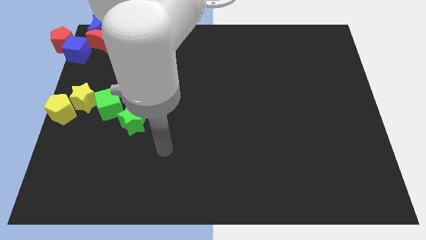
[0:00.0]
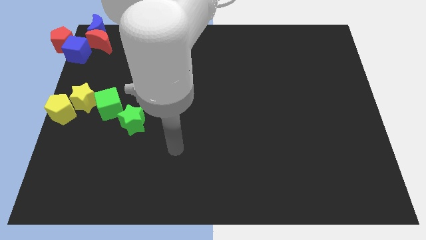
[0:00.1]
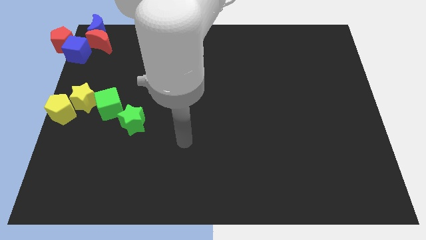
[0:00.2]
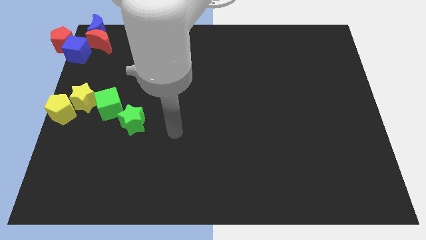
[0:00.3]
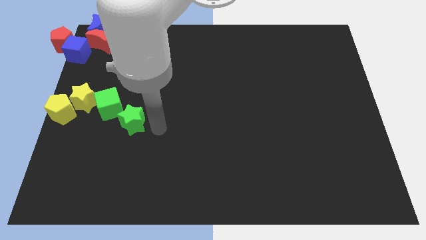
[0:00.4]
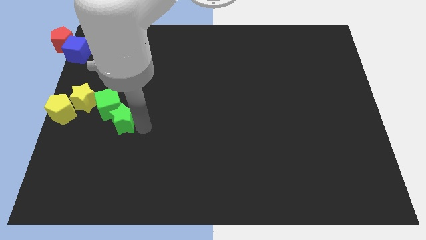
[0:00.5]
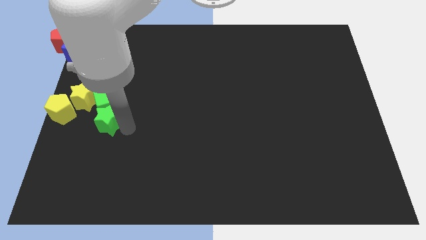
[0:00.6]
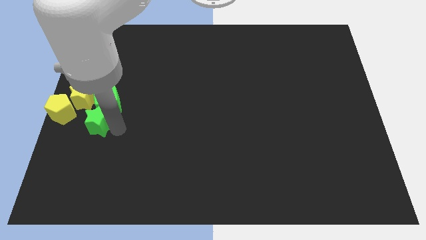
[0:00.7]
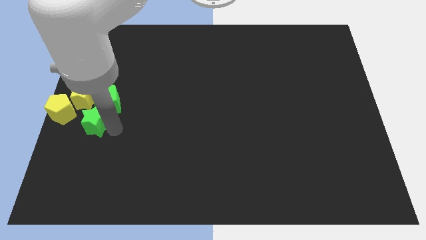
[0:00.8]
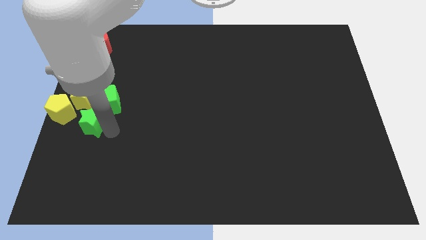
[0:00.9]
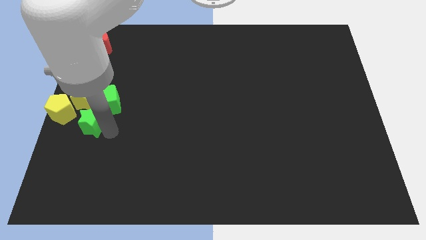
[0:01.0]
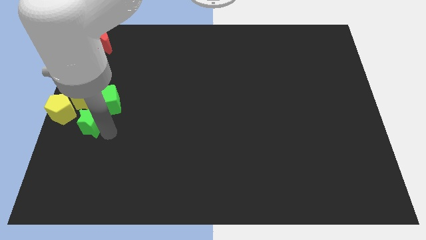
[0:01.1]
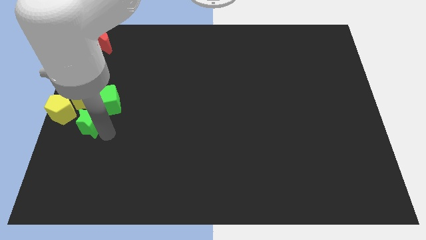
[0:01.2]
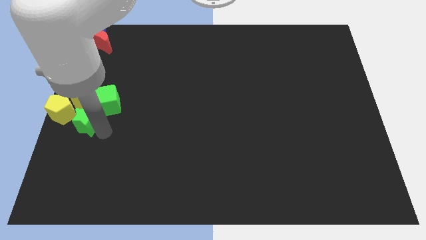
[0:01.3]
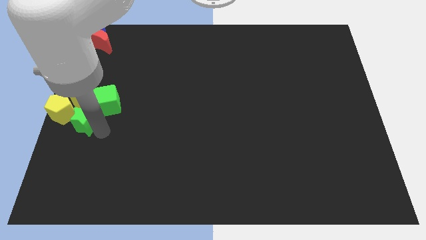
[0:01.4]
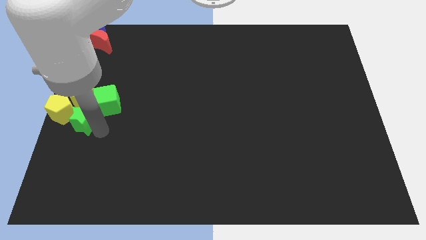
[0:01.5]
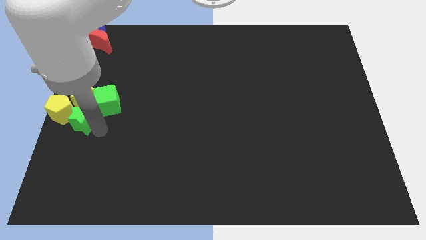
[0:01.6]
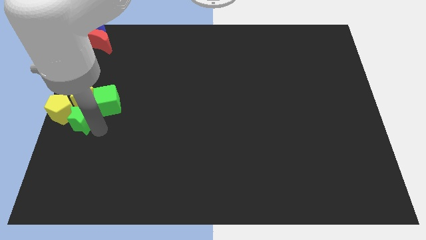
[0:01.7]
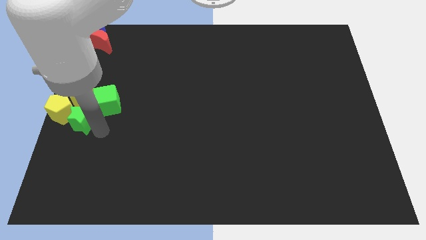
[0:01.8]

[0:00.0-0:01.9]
push green star below yellow star

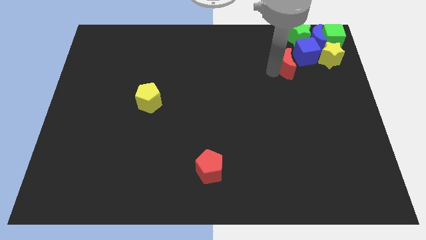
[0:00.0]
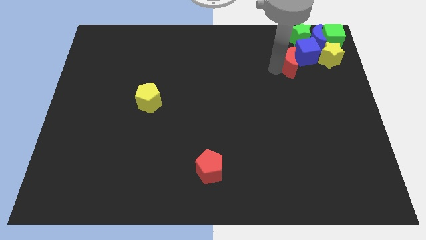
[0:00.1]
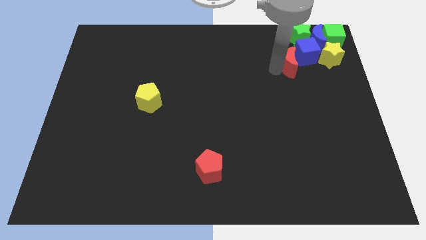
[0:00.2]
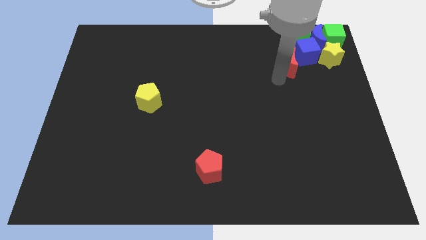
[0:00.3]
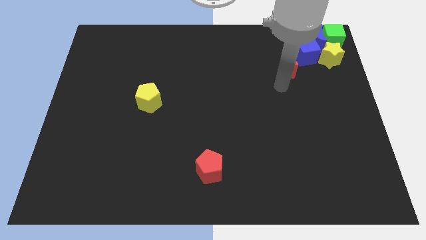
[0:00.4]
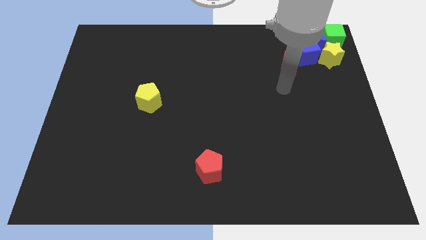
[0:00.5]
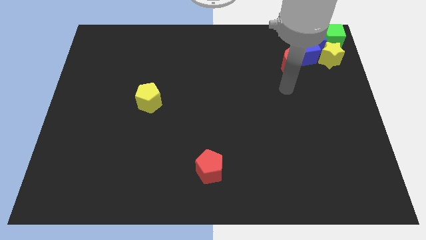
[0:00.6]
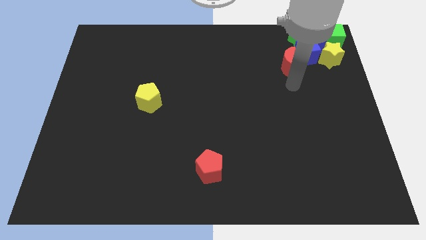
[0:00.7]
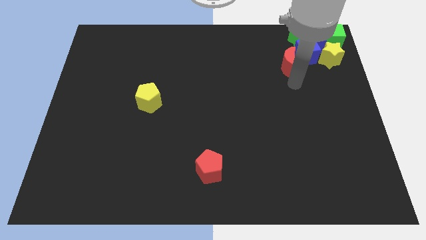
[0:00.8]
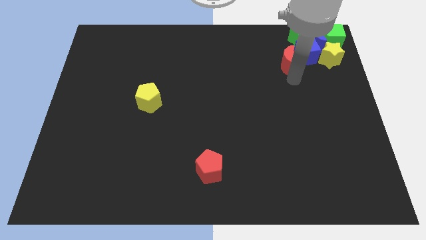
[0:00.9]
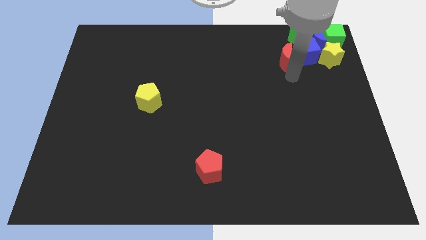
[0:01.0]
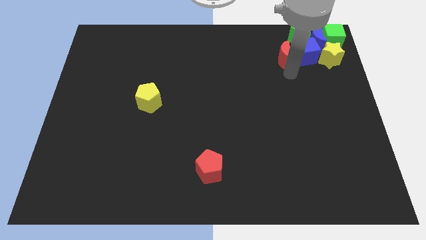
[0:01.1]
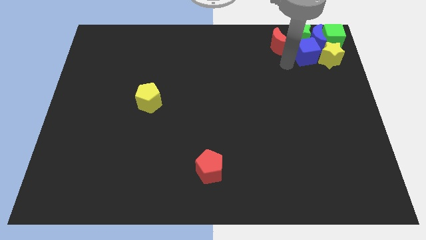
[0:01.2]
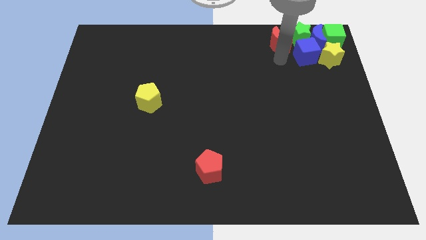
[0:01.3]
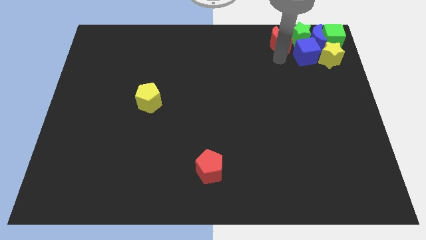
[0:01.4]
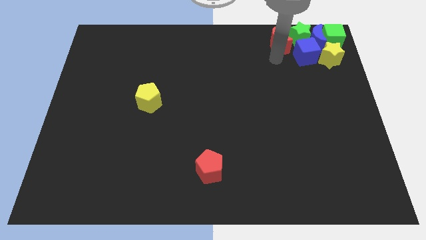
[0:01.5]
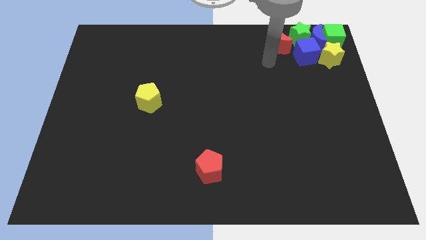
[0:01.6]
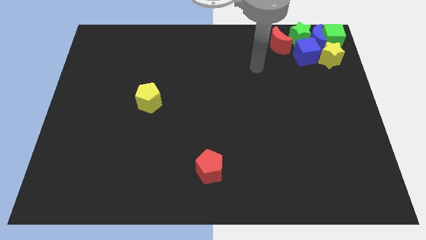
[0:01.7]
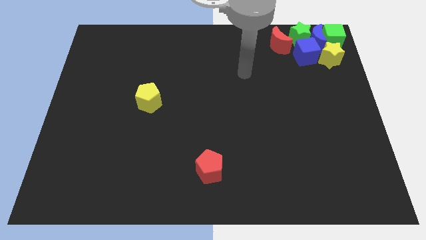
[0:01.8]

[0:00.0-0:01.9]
place the red moon to the left of the green star

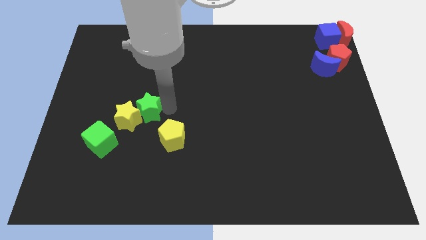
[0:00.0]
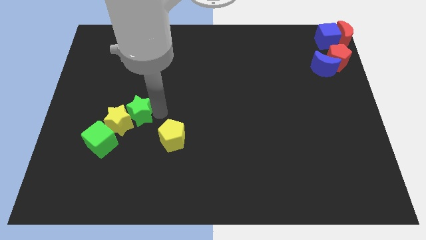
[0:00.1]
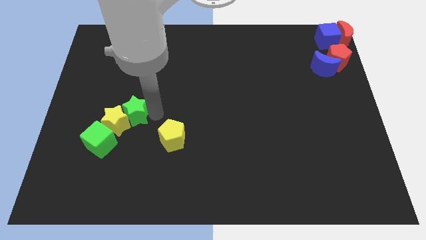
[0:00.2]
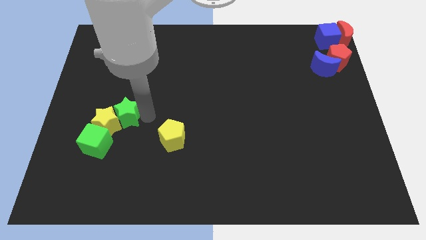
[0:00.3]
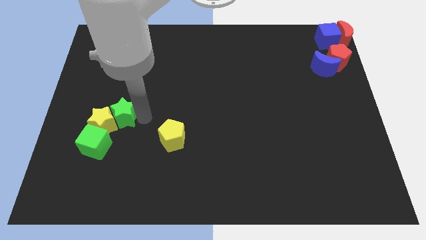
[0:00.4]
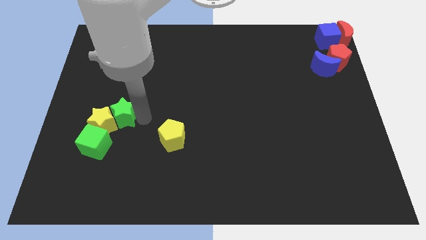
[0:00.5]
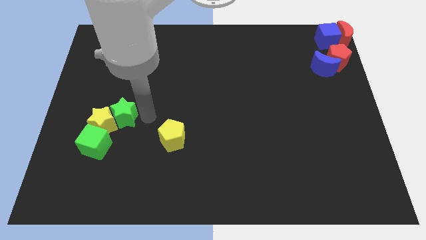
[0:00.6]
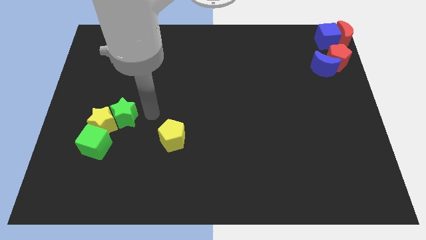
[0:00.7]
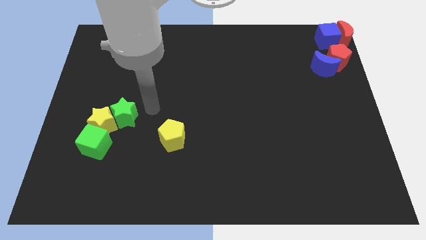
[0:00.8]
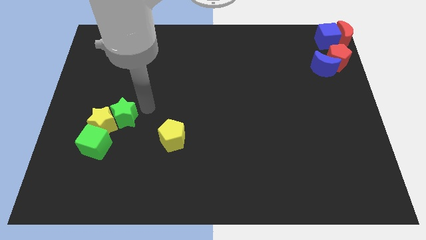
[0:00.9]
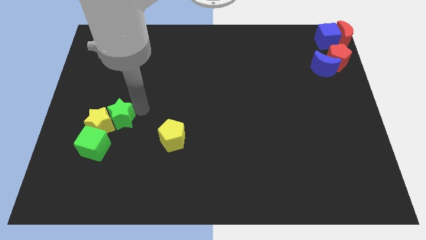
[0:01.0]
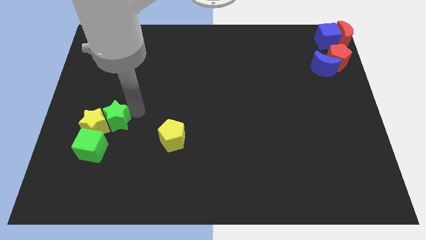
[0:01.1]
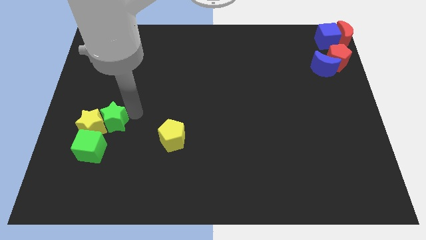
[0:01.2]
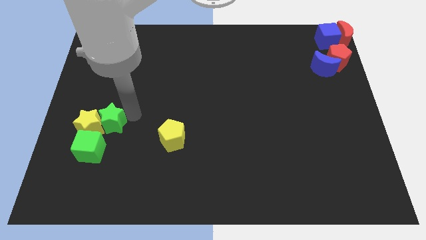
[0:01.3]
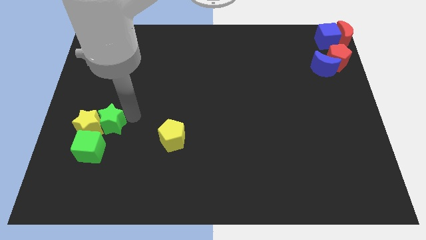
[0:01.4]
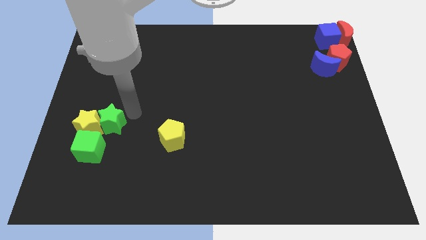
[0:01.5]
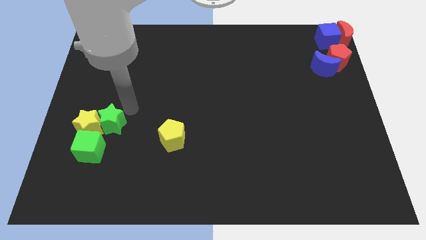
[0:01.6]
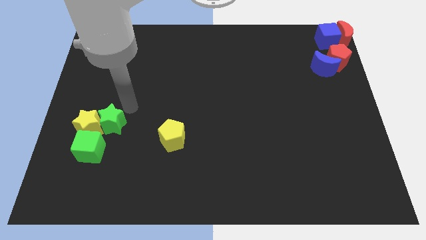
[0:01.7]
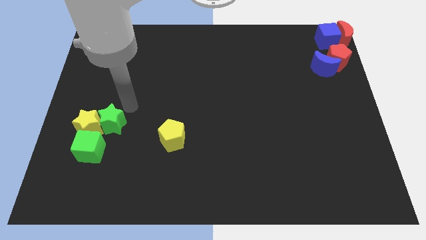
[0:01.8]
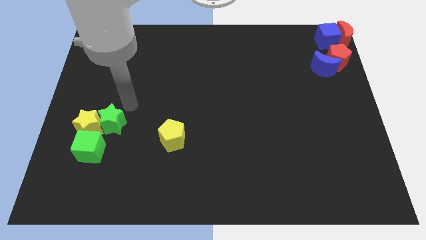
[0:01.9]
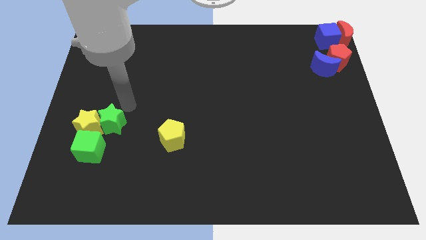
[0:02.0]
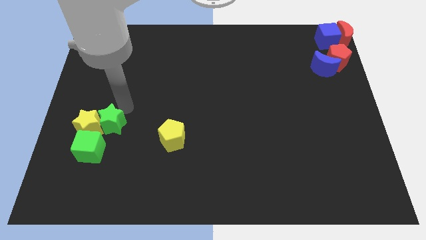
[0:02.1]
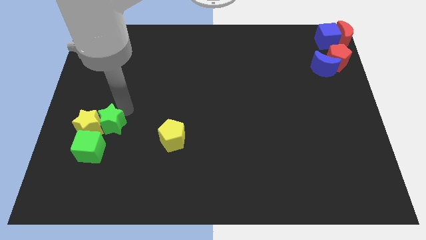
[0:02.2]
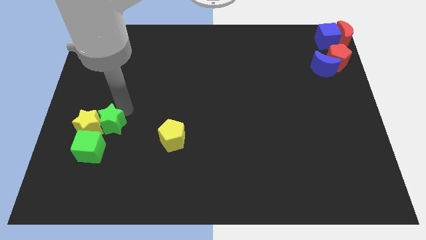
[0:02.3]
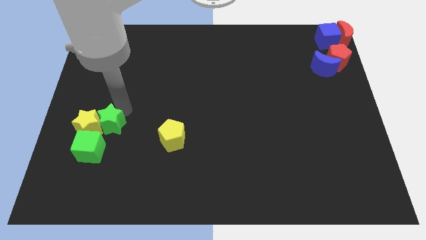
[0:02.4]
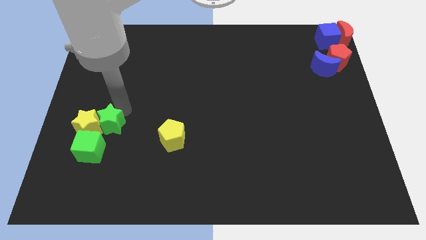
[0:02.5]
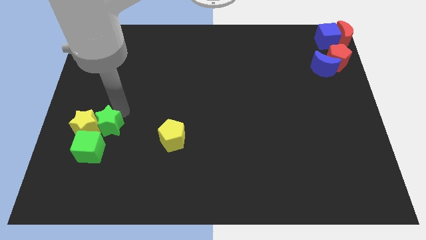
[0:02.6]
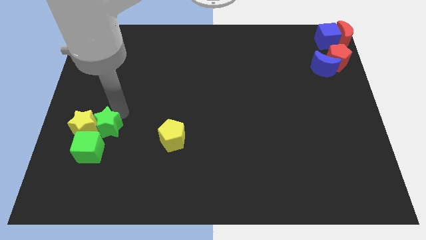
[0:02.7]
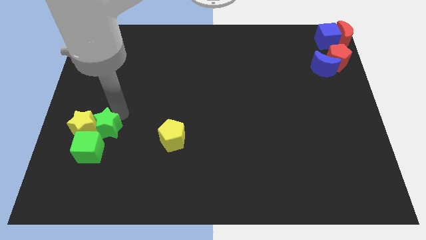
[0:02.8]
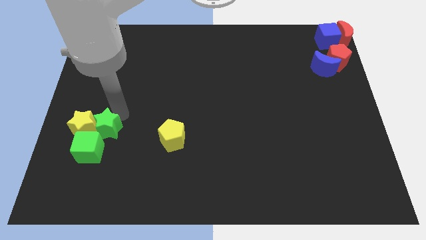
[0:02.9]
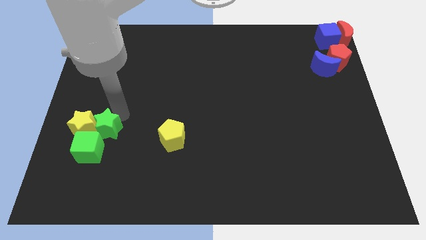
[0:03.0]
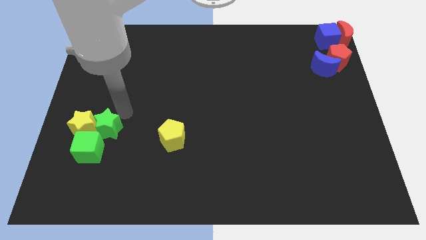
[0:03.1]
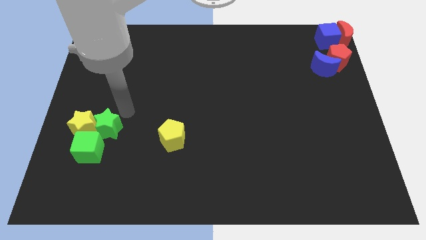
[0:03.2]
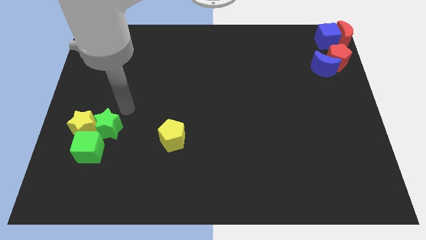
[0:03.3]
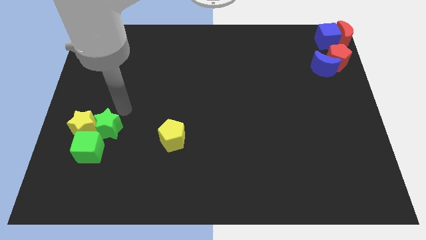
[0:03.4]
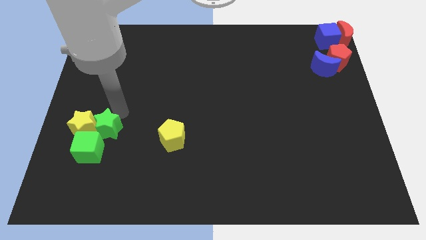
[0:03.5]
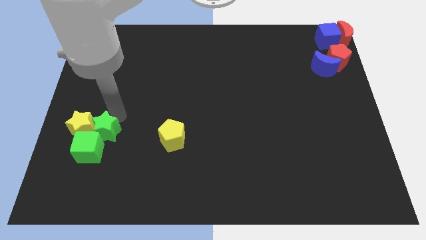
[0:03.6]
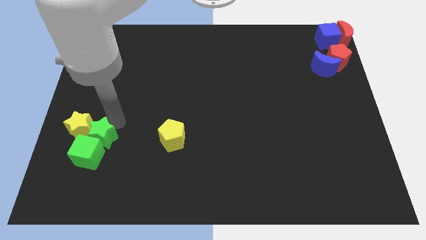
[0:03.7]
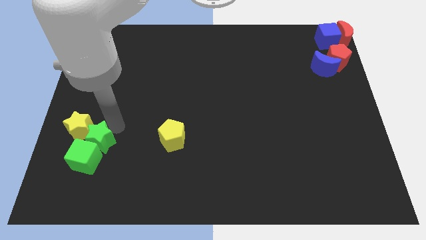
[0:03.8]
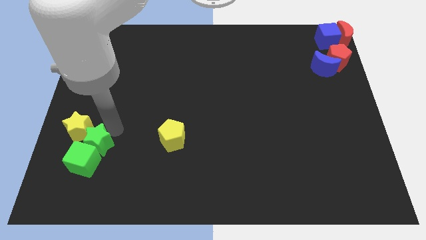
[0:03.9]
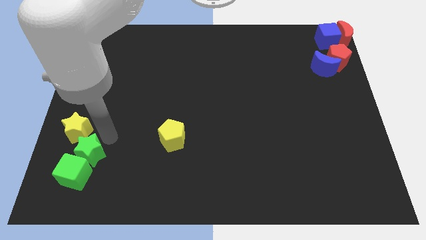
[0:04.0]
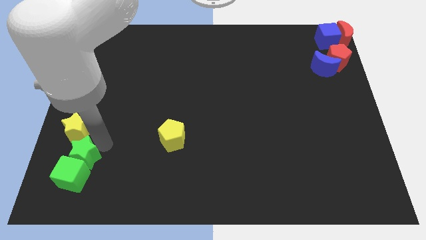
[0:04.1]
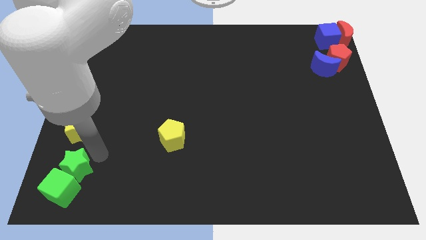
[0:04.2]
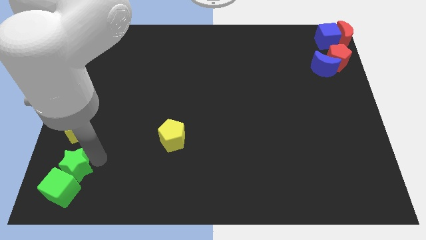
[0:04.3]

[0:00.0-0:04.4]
push the green cube with green star to the left corner of the board

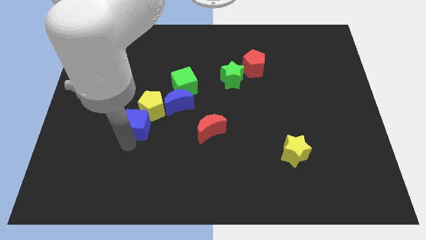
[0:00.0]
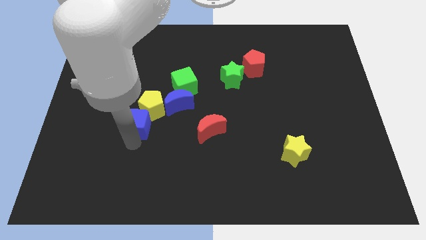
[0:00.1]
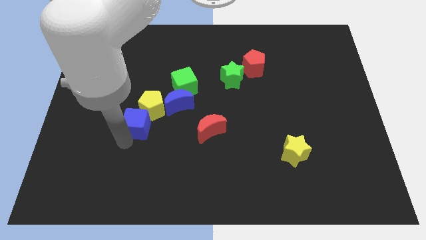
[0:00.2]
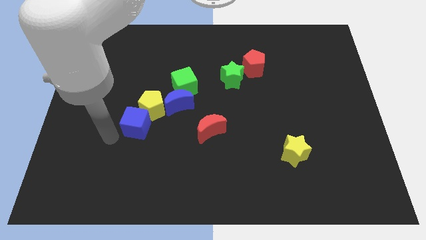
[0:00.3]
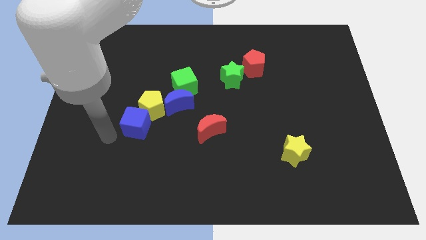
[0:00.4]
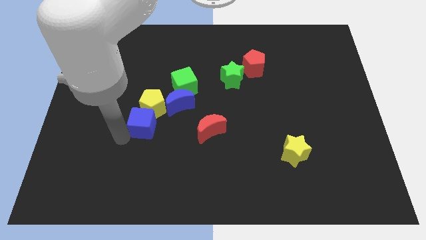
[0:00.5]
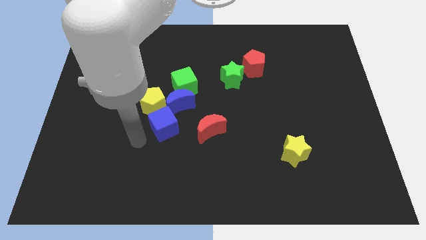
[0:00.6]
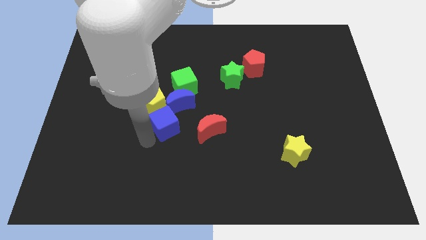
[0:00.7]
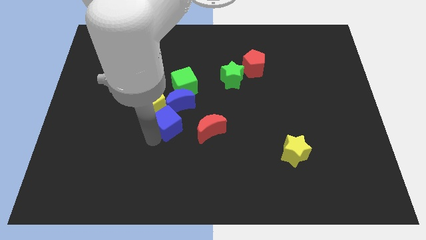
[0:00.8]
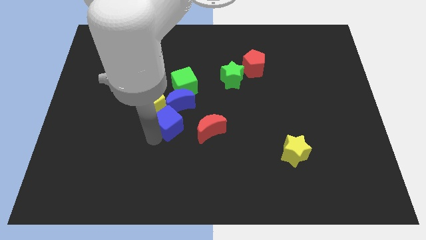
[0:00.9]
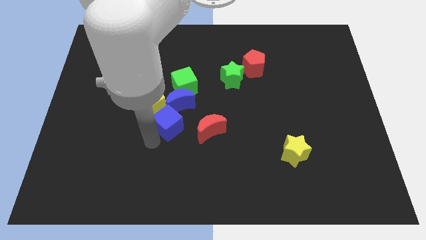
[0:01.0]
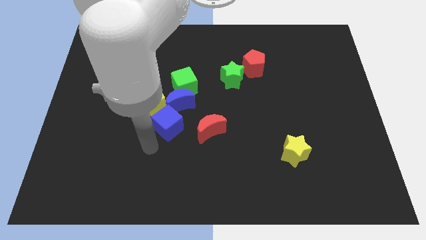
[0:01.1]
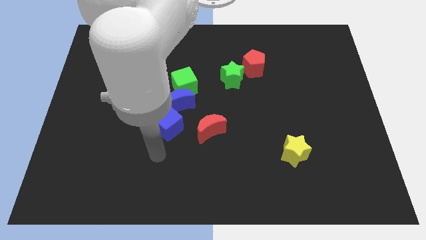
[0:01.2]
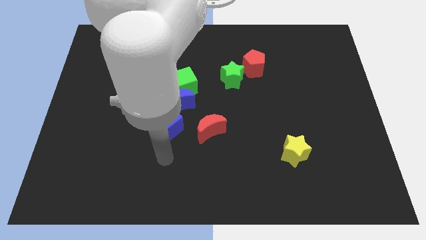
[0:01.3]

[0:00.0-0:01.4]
move the blue cube to the bottom of the yellow pentagon
